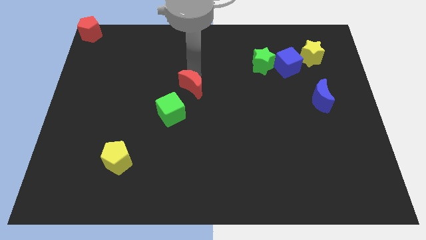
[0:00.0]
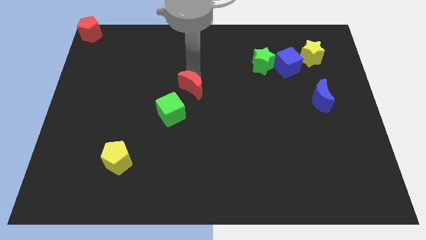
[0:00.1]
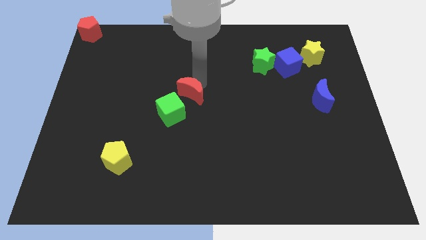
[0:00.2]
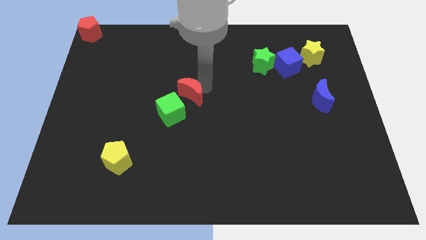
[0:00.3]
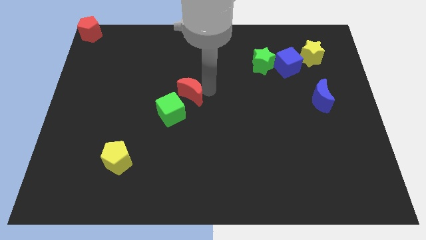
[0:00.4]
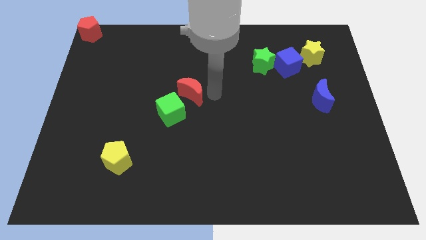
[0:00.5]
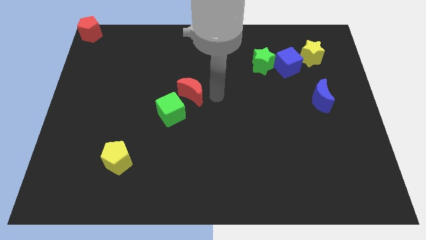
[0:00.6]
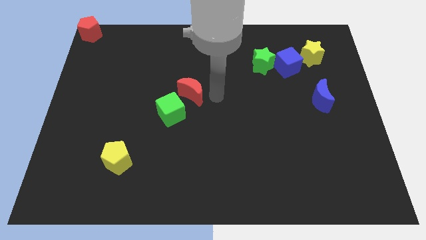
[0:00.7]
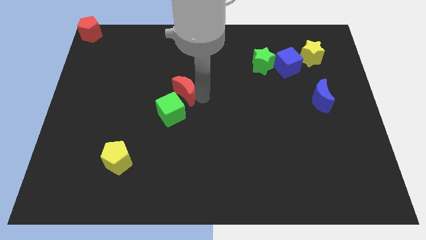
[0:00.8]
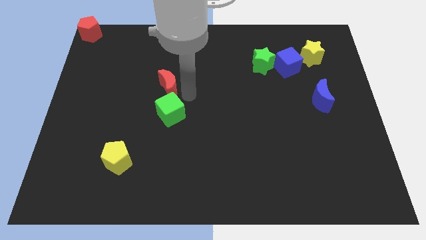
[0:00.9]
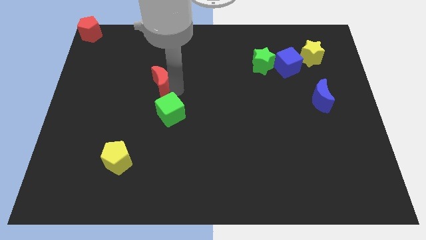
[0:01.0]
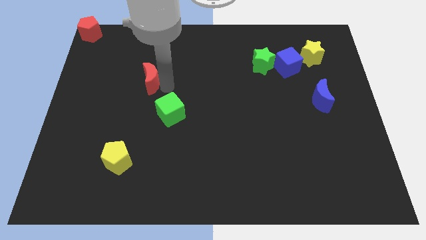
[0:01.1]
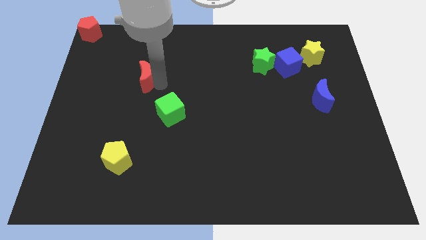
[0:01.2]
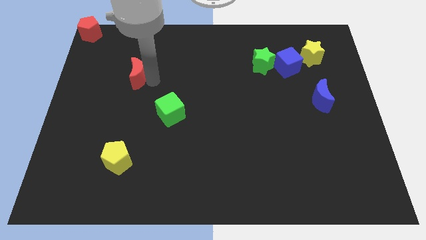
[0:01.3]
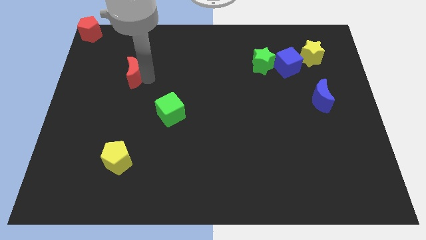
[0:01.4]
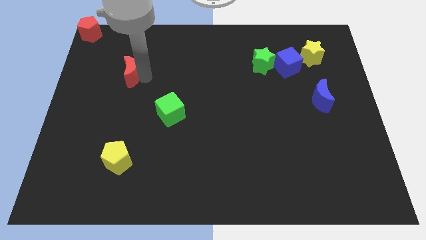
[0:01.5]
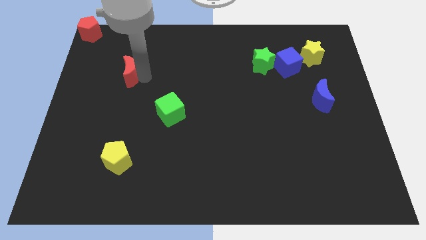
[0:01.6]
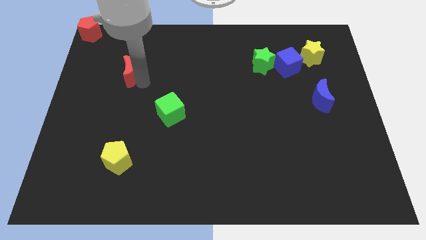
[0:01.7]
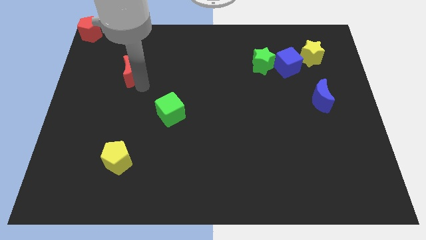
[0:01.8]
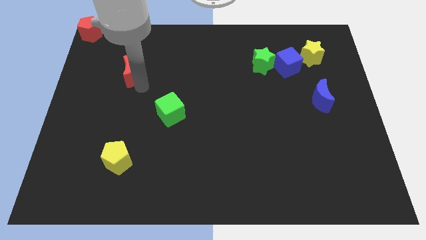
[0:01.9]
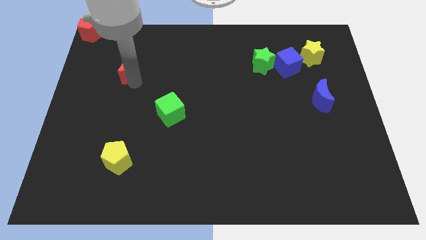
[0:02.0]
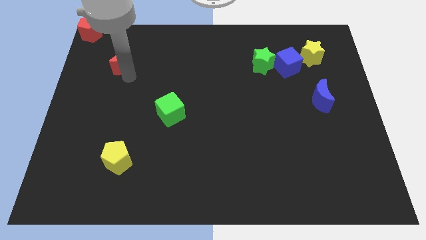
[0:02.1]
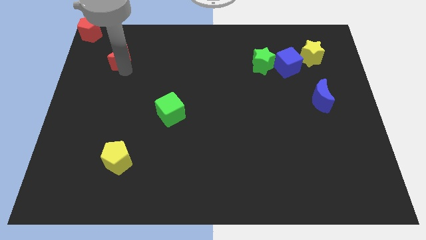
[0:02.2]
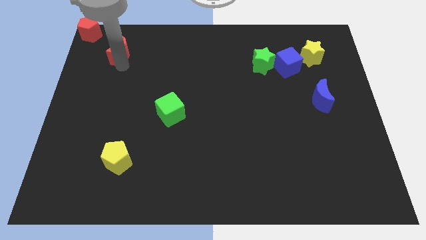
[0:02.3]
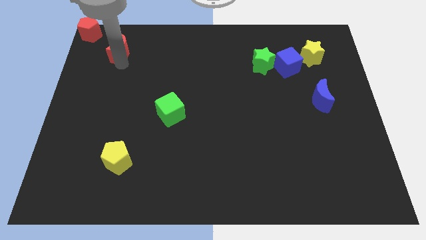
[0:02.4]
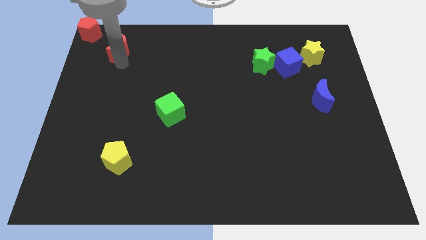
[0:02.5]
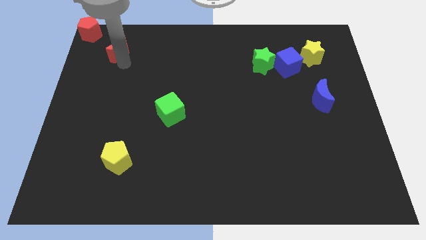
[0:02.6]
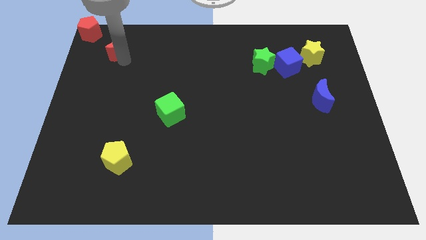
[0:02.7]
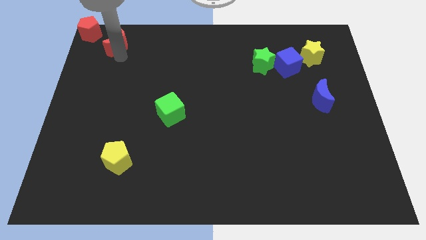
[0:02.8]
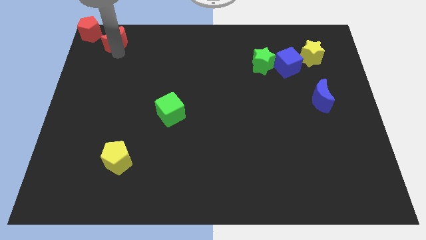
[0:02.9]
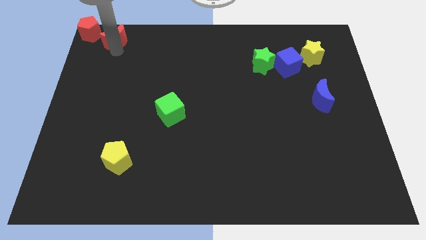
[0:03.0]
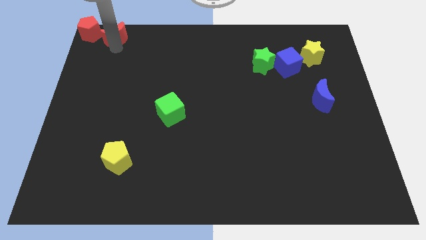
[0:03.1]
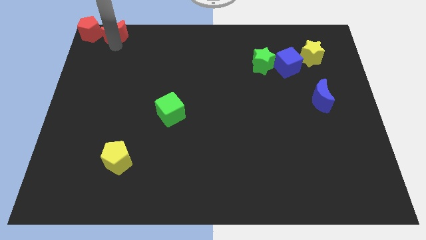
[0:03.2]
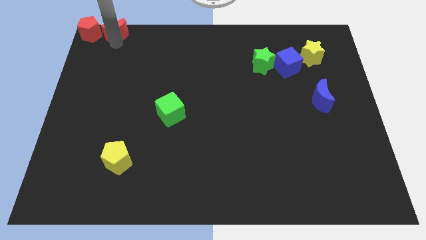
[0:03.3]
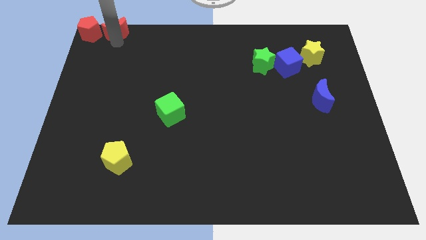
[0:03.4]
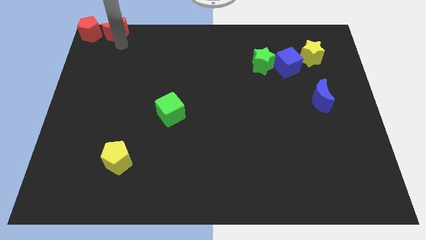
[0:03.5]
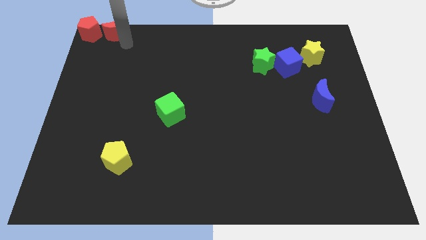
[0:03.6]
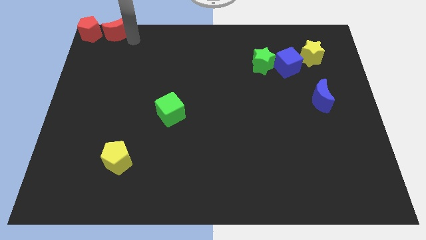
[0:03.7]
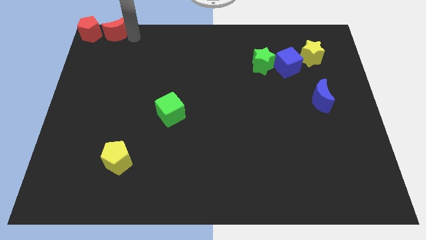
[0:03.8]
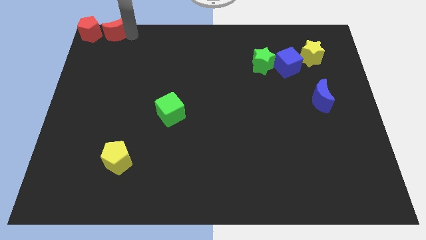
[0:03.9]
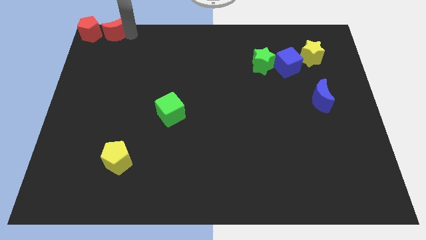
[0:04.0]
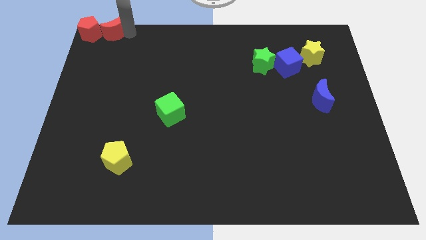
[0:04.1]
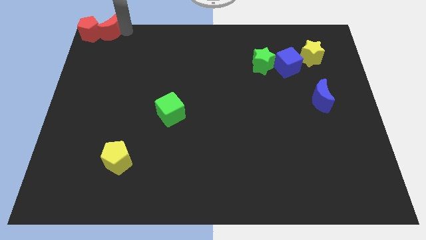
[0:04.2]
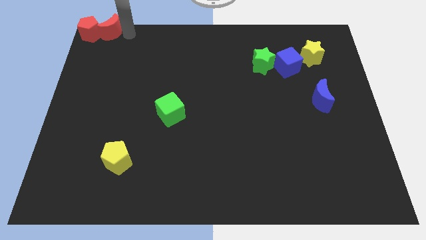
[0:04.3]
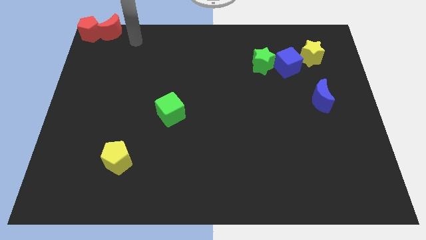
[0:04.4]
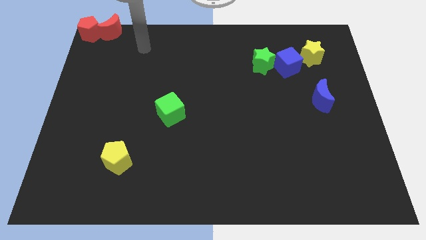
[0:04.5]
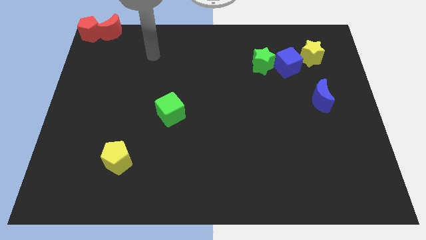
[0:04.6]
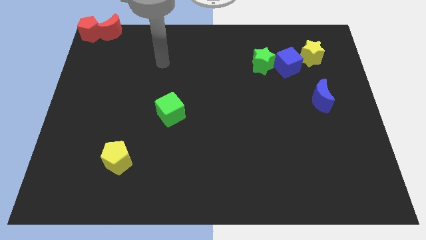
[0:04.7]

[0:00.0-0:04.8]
push the red crescent into red pentagon

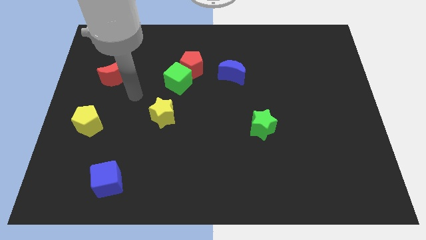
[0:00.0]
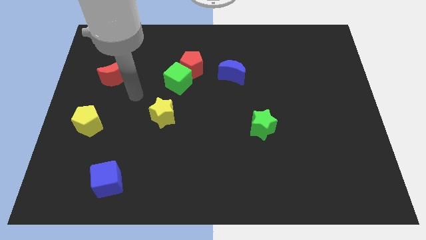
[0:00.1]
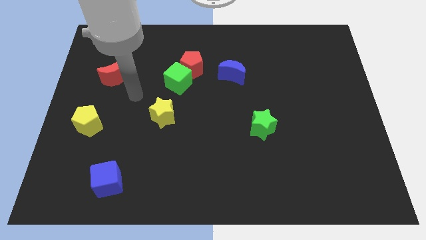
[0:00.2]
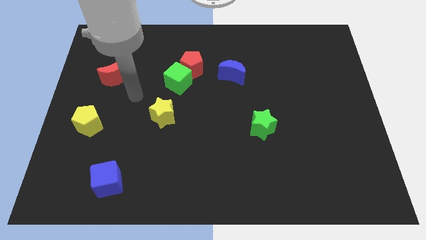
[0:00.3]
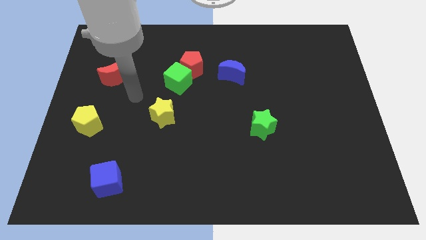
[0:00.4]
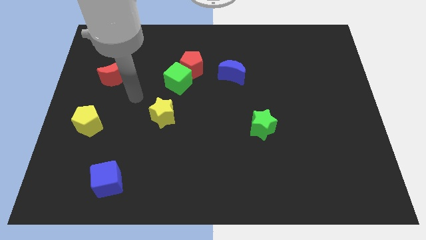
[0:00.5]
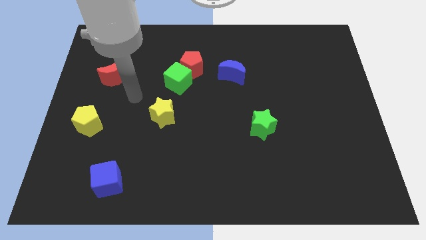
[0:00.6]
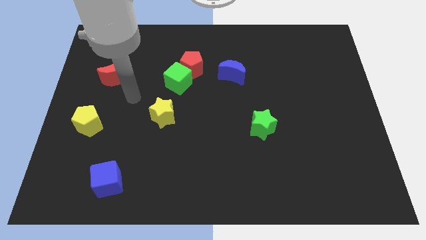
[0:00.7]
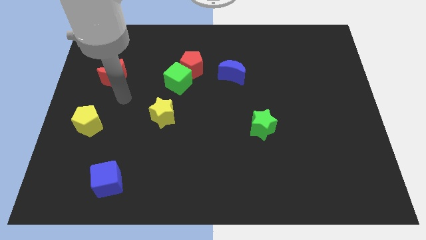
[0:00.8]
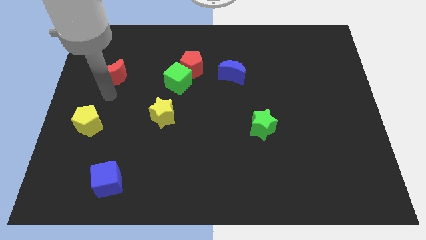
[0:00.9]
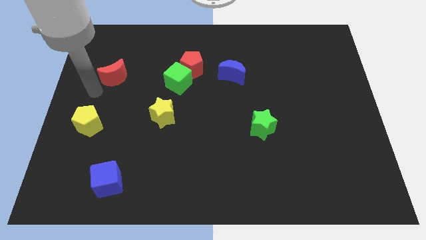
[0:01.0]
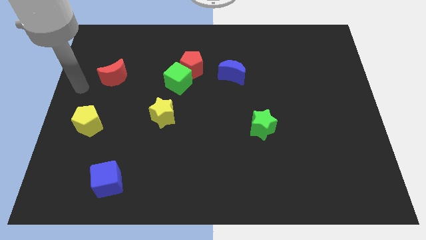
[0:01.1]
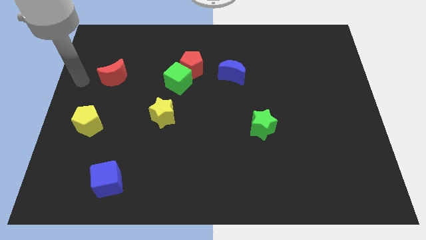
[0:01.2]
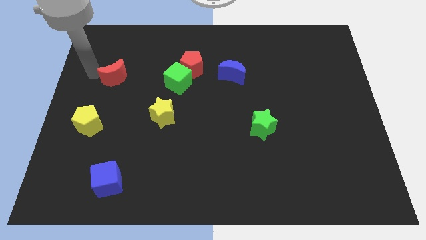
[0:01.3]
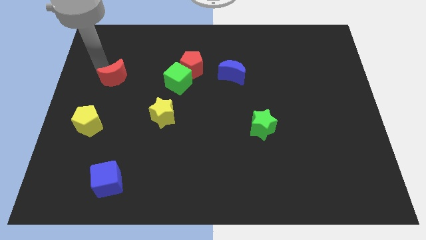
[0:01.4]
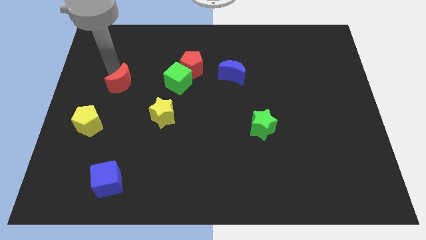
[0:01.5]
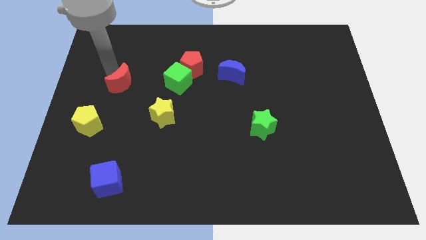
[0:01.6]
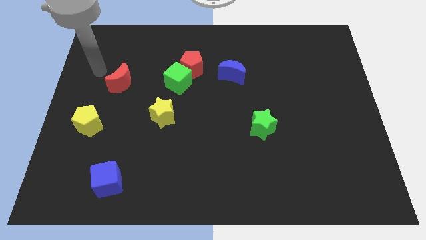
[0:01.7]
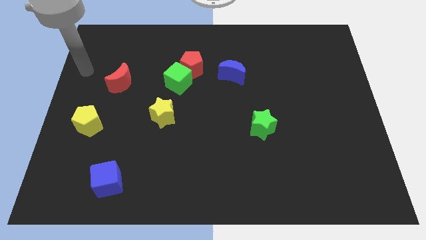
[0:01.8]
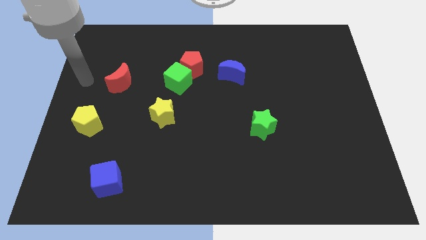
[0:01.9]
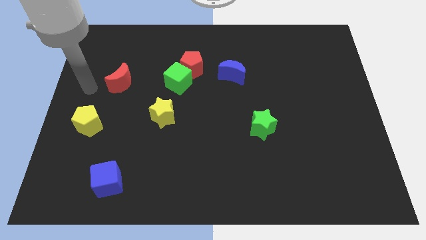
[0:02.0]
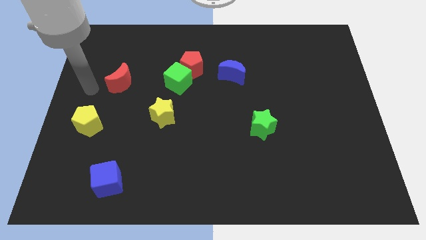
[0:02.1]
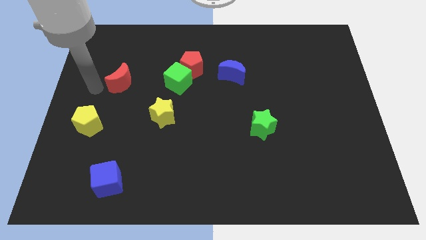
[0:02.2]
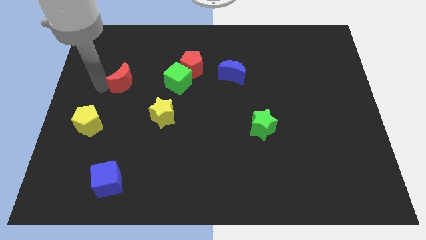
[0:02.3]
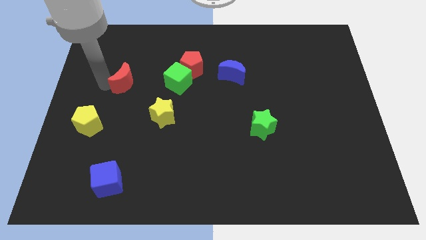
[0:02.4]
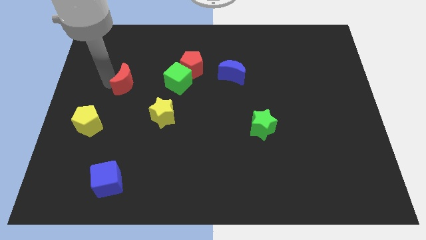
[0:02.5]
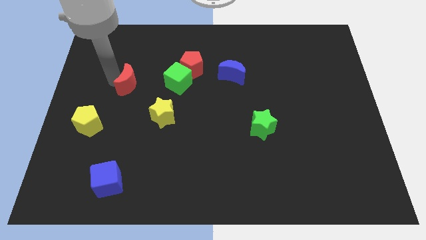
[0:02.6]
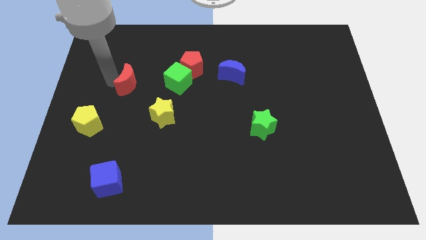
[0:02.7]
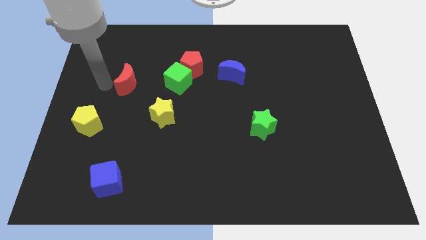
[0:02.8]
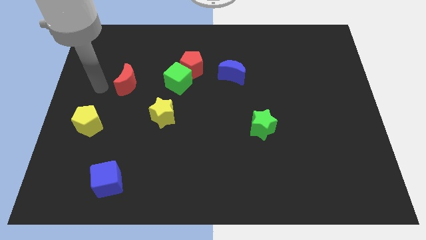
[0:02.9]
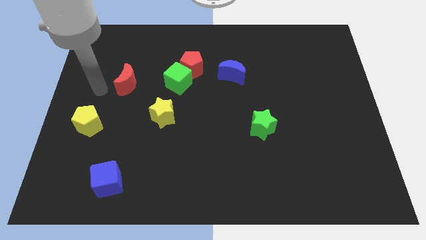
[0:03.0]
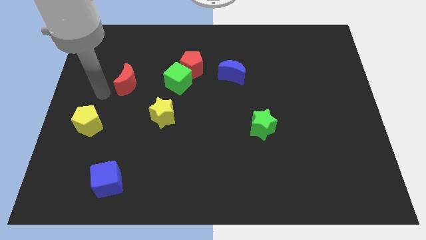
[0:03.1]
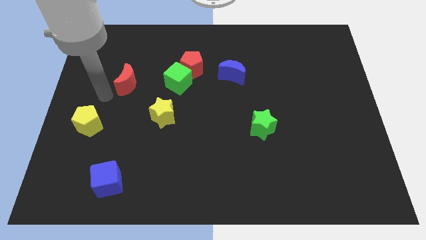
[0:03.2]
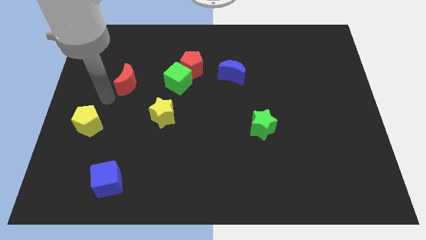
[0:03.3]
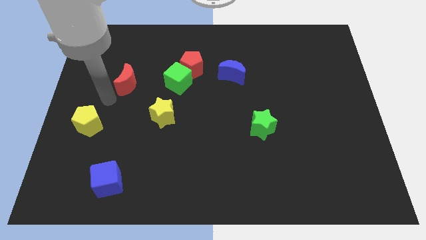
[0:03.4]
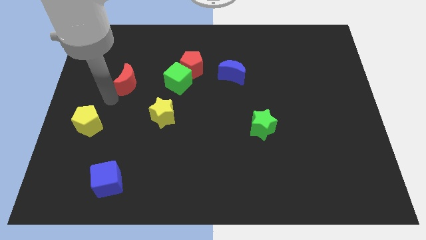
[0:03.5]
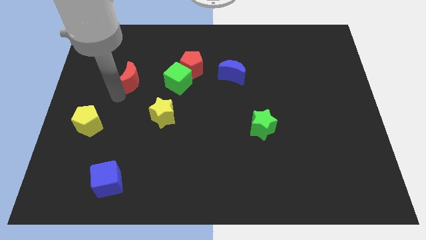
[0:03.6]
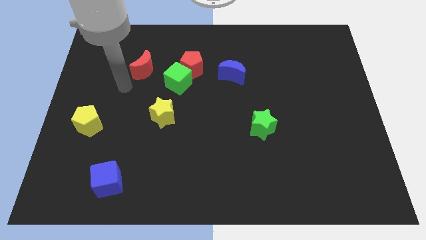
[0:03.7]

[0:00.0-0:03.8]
place the red moon diagonally top left to the yellow star

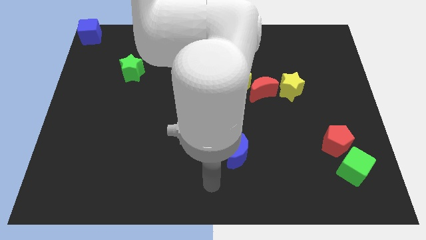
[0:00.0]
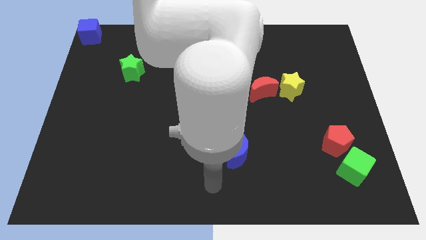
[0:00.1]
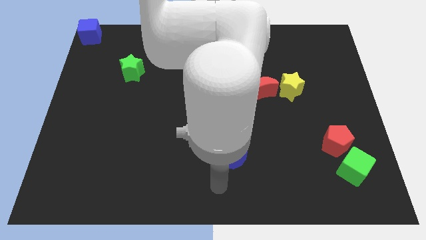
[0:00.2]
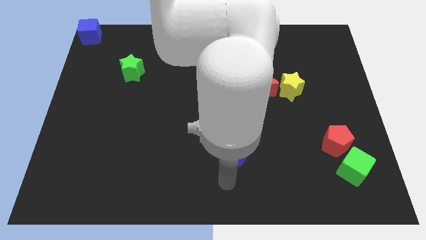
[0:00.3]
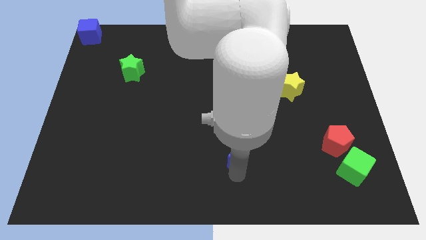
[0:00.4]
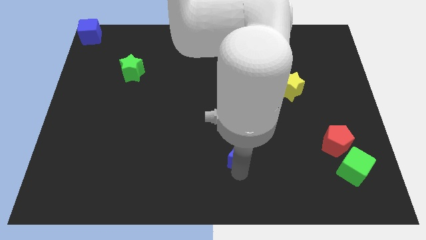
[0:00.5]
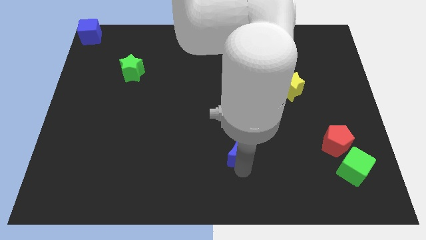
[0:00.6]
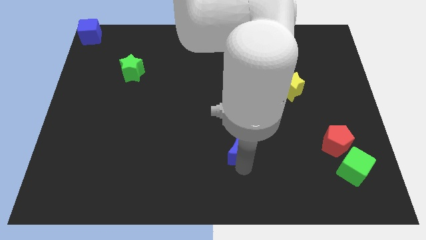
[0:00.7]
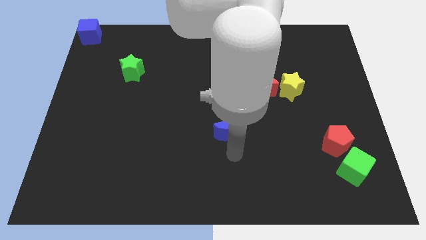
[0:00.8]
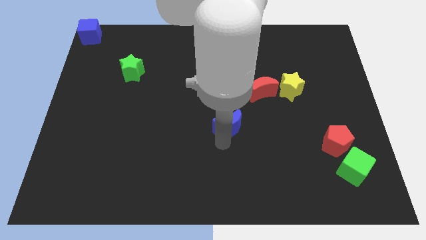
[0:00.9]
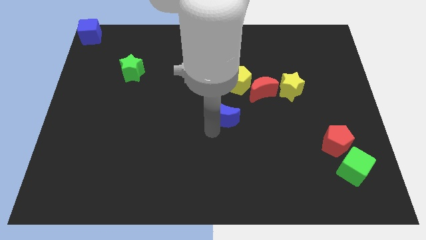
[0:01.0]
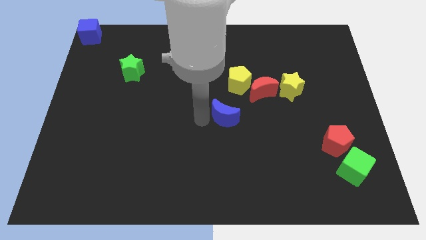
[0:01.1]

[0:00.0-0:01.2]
move the blue crescent slightly to the top
